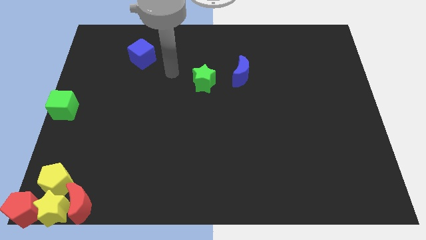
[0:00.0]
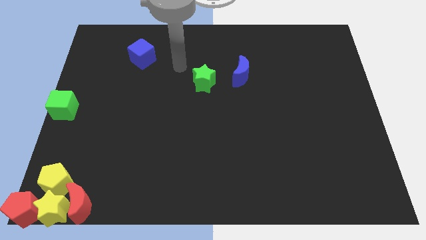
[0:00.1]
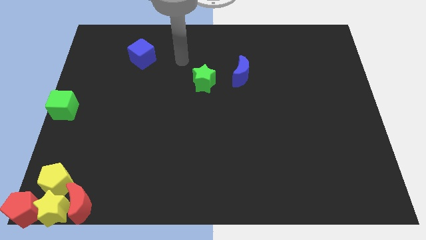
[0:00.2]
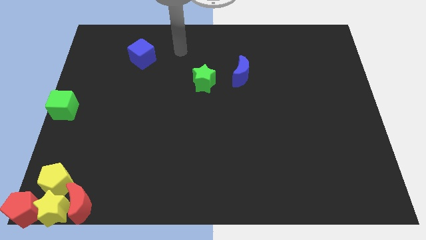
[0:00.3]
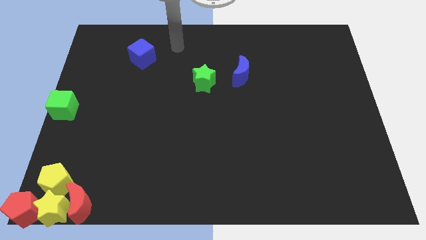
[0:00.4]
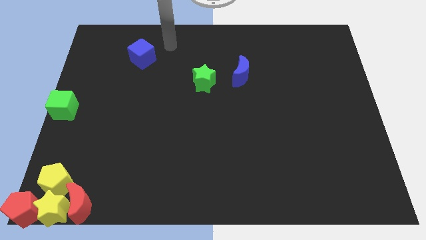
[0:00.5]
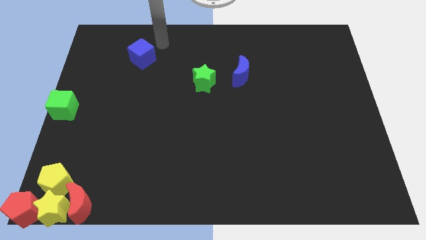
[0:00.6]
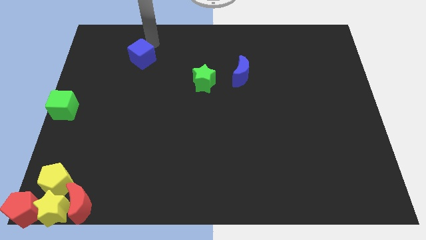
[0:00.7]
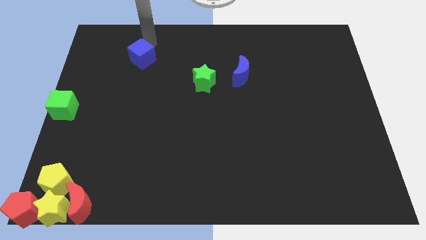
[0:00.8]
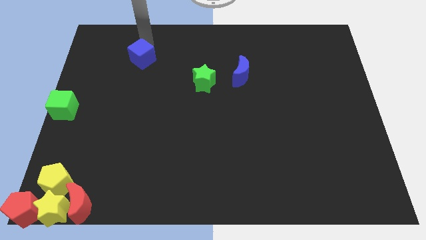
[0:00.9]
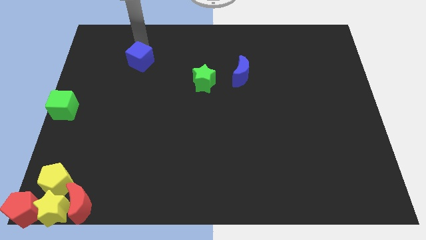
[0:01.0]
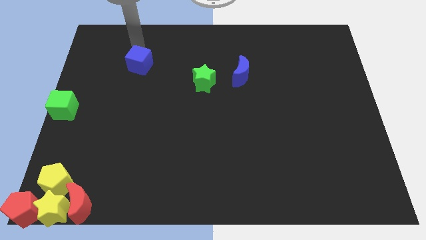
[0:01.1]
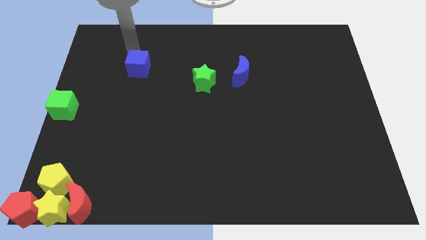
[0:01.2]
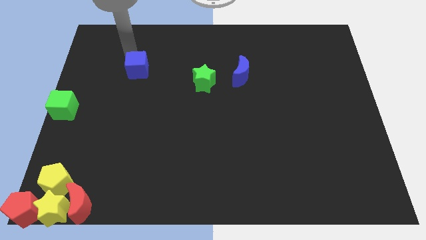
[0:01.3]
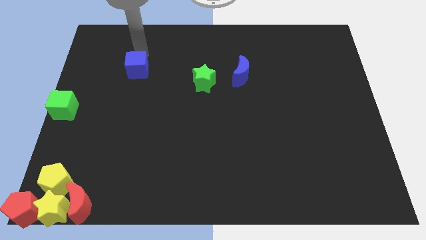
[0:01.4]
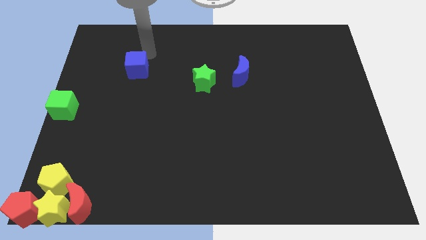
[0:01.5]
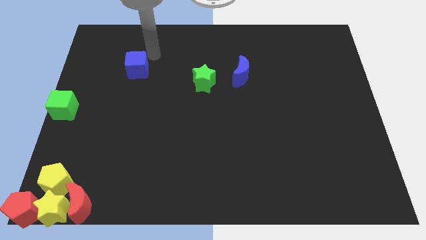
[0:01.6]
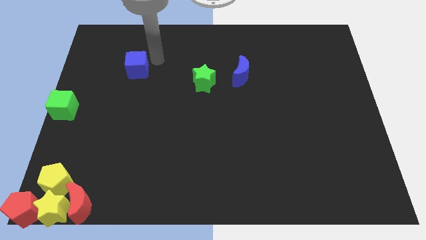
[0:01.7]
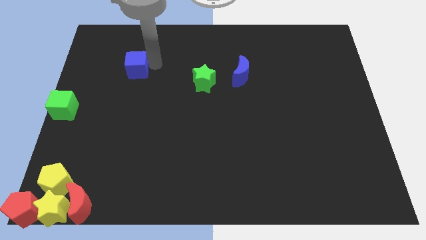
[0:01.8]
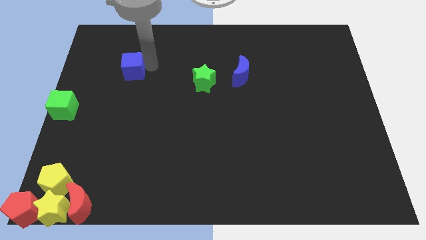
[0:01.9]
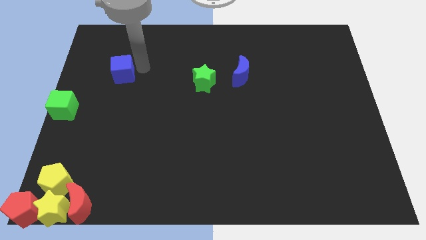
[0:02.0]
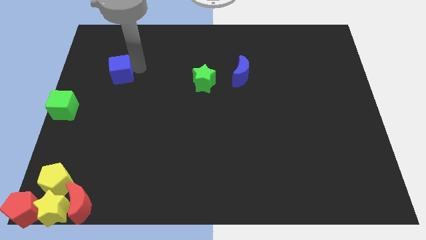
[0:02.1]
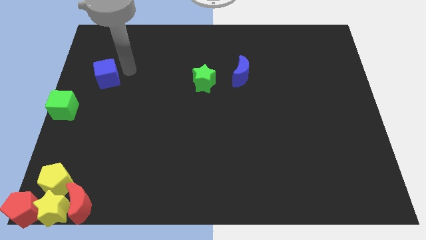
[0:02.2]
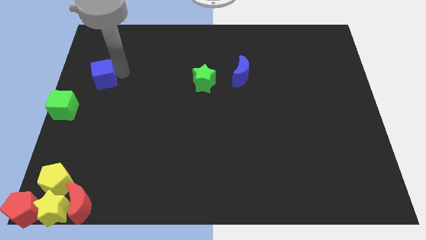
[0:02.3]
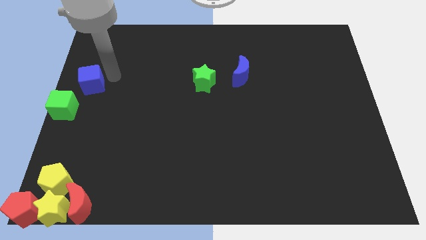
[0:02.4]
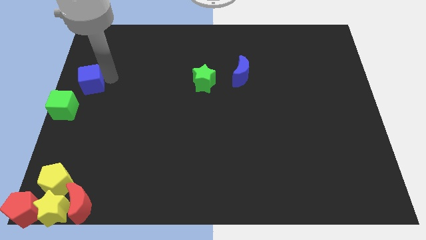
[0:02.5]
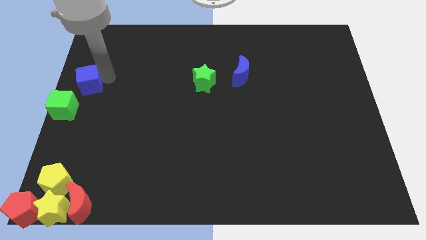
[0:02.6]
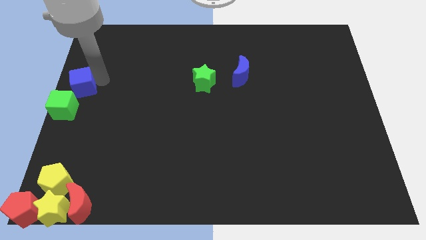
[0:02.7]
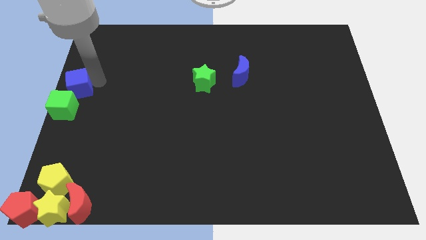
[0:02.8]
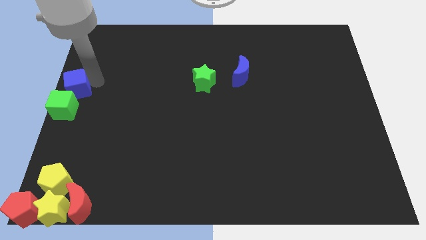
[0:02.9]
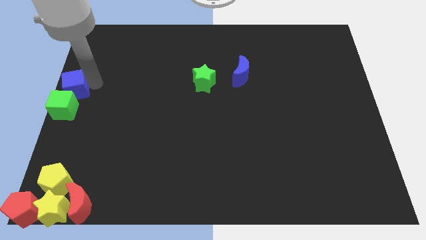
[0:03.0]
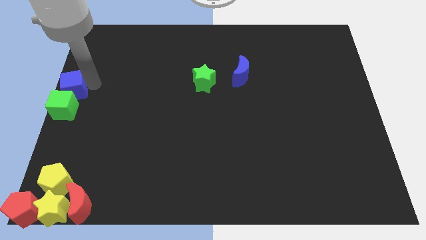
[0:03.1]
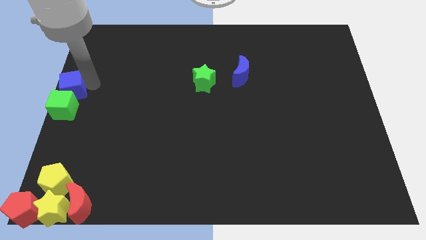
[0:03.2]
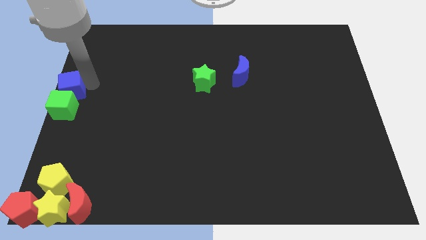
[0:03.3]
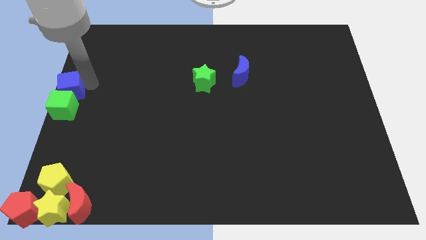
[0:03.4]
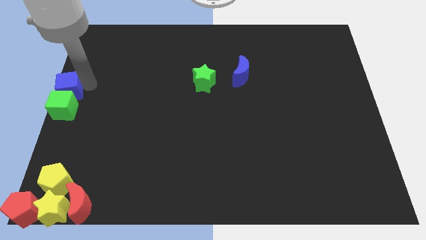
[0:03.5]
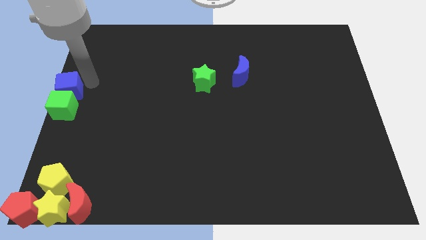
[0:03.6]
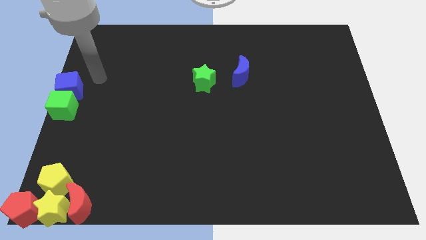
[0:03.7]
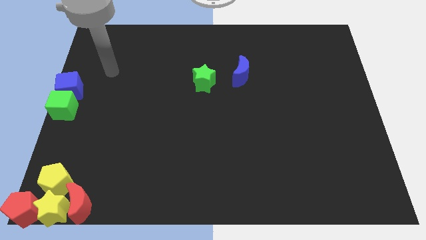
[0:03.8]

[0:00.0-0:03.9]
put the blue cube at the top of the green cube

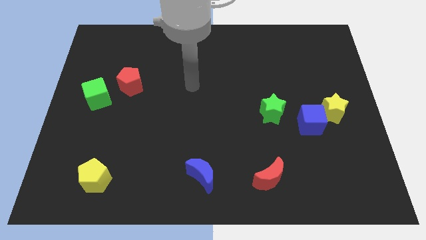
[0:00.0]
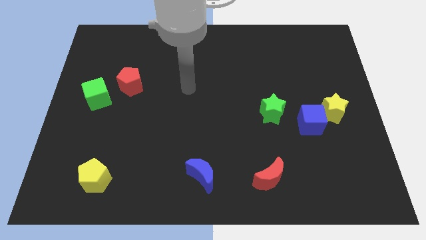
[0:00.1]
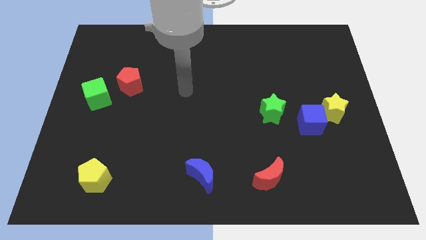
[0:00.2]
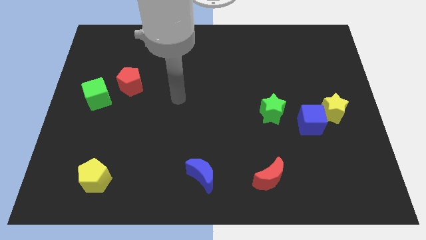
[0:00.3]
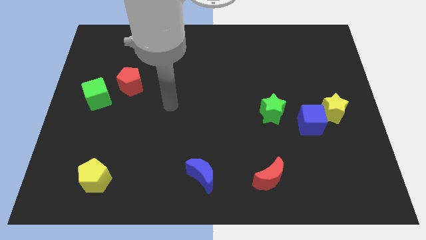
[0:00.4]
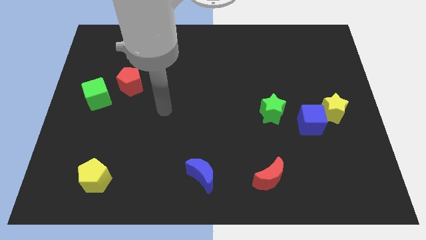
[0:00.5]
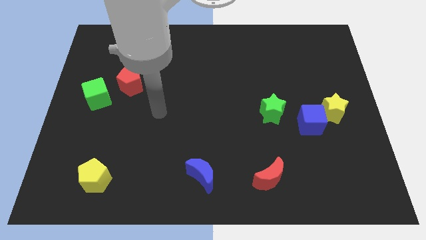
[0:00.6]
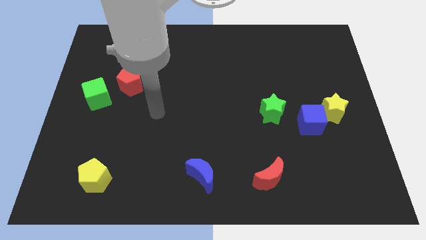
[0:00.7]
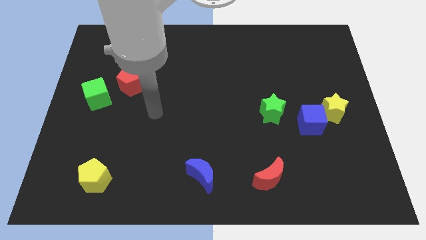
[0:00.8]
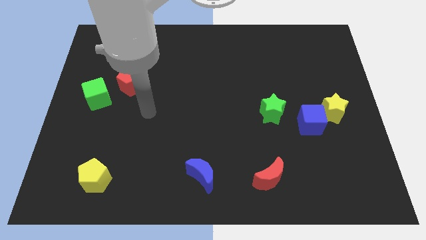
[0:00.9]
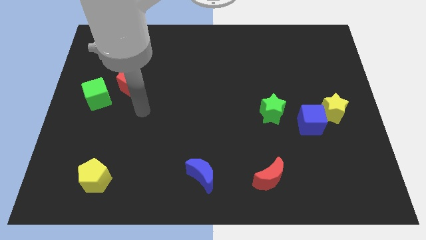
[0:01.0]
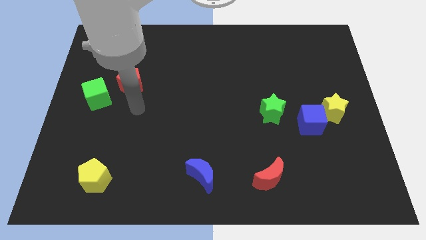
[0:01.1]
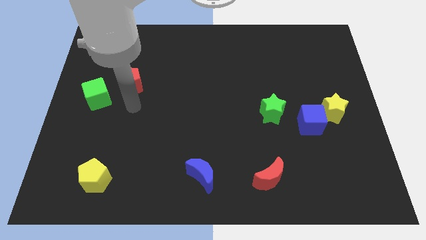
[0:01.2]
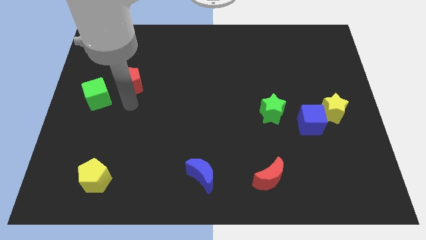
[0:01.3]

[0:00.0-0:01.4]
touch the bottom of red pentagon

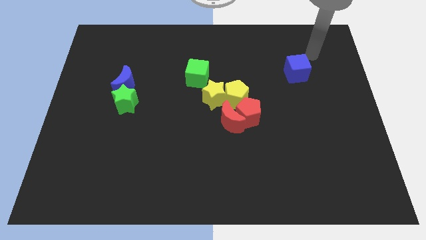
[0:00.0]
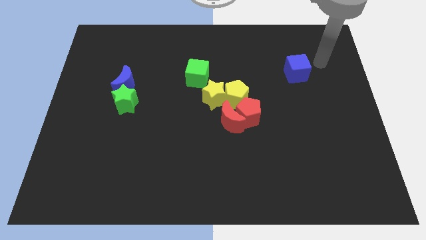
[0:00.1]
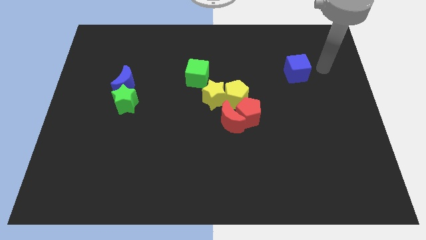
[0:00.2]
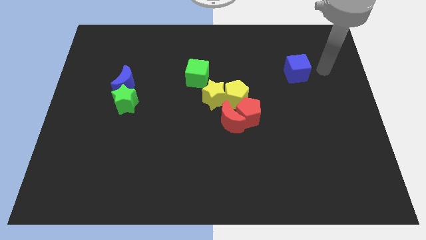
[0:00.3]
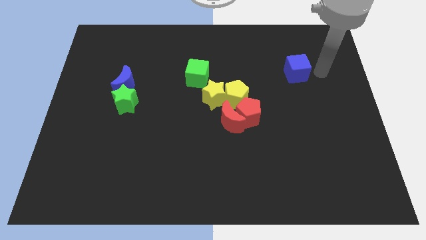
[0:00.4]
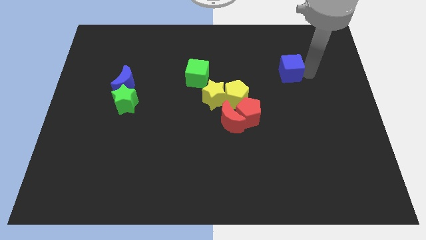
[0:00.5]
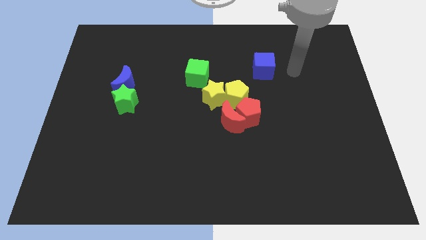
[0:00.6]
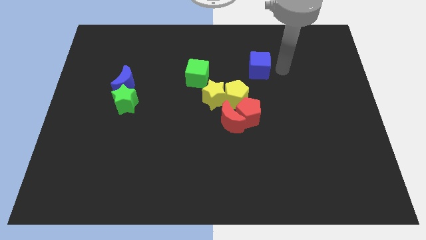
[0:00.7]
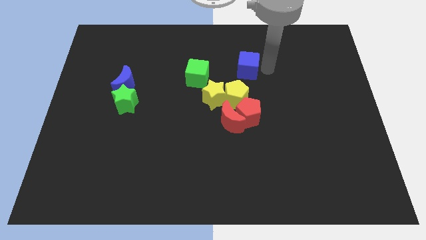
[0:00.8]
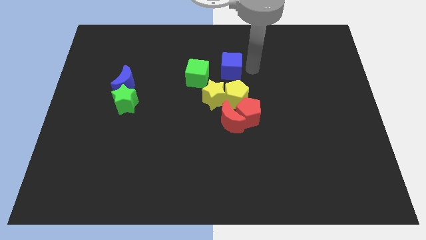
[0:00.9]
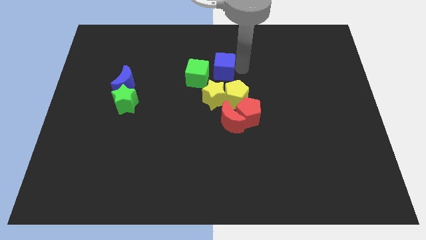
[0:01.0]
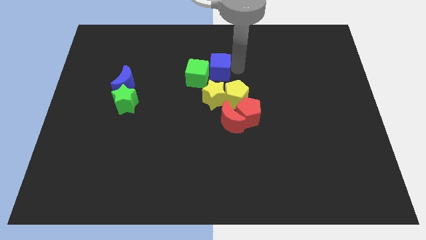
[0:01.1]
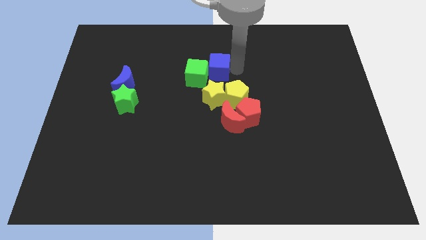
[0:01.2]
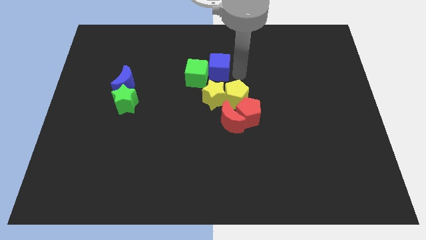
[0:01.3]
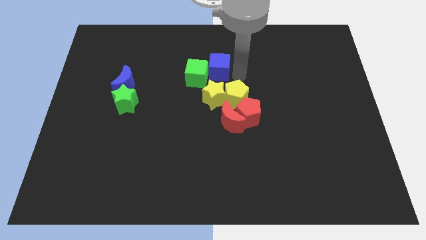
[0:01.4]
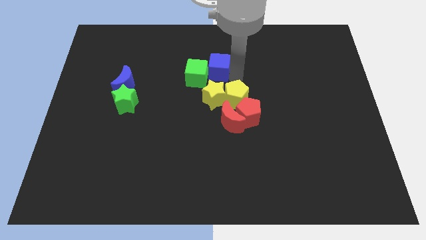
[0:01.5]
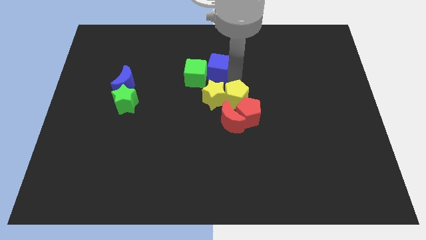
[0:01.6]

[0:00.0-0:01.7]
move the blue cube near green cube

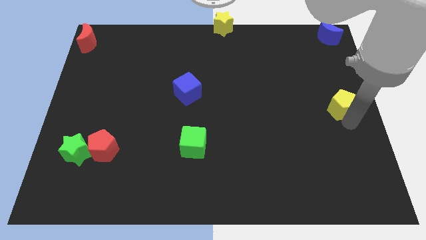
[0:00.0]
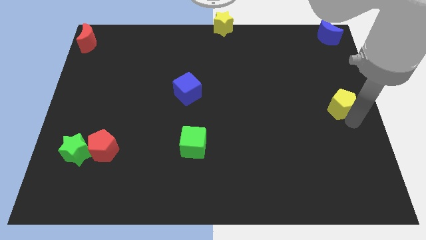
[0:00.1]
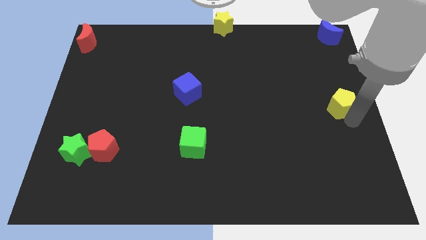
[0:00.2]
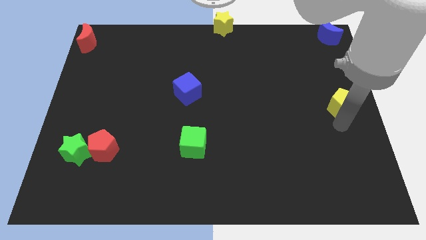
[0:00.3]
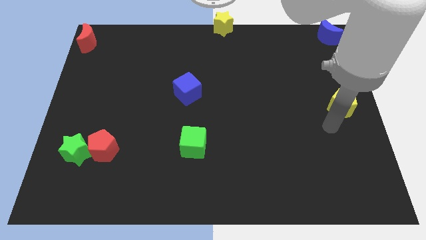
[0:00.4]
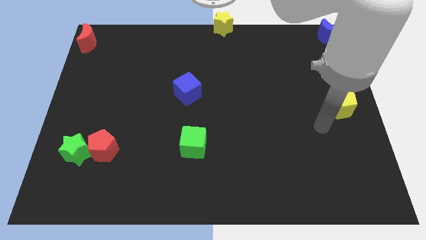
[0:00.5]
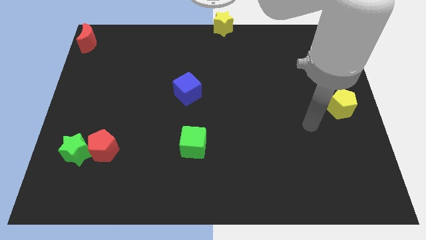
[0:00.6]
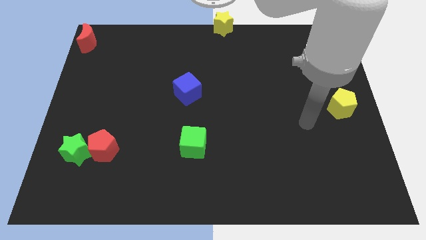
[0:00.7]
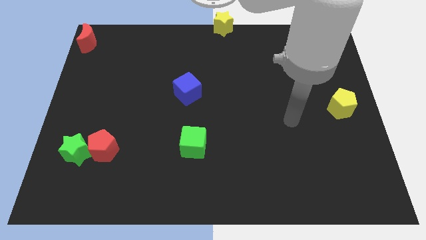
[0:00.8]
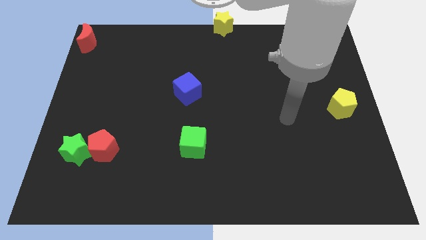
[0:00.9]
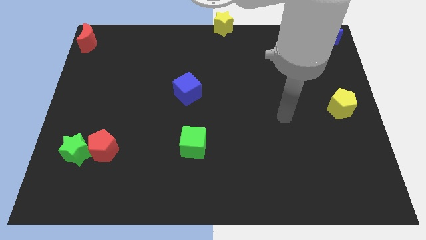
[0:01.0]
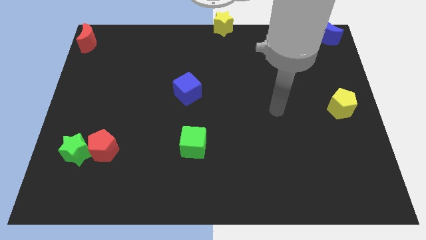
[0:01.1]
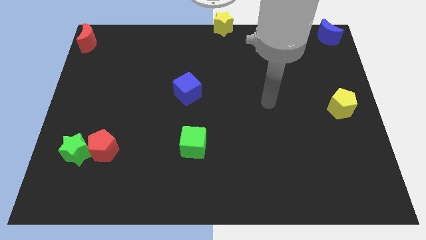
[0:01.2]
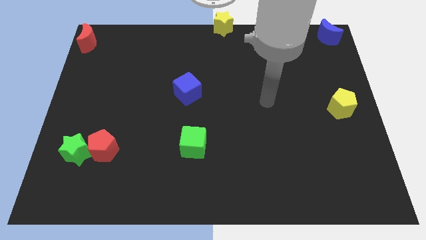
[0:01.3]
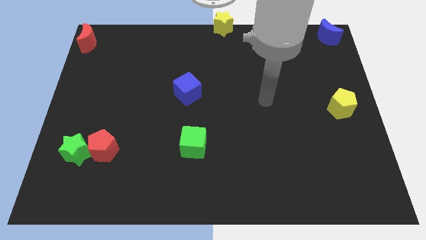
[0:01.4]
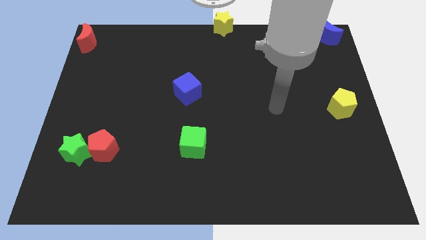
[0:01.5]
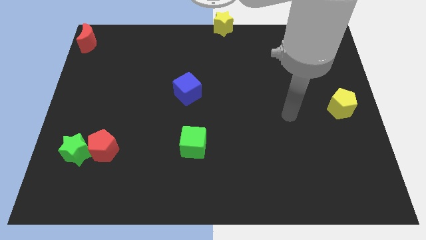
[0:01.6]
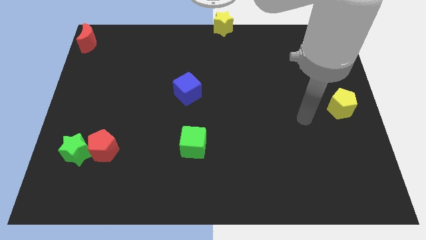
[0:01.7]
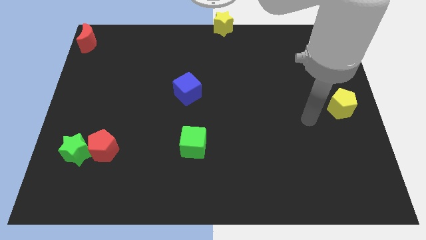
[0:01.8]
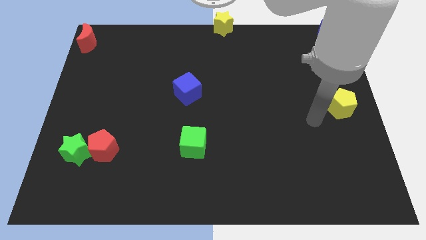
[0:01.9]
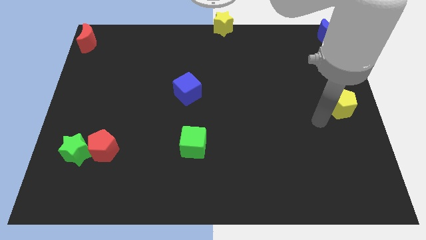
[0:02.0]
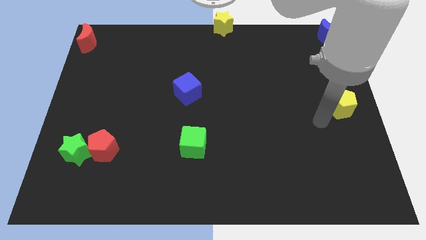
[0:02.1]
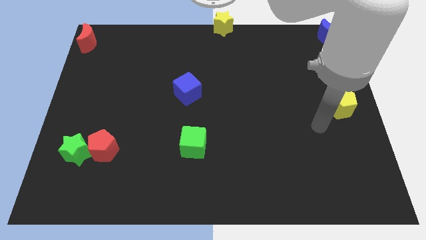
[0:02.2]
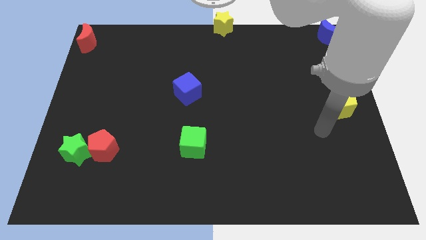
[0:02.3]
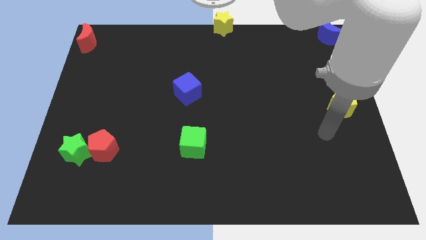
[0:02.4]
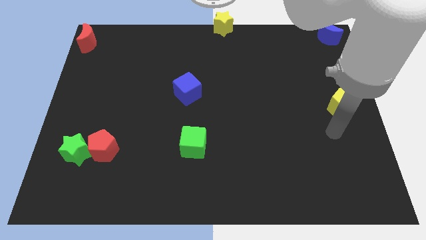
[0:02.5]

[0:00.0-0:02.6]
move yellow pentagon on the right side of the board
